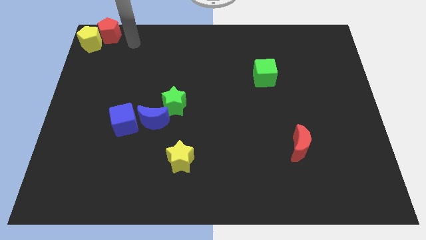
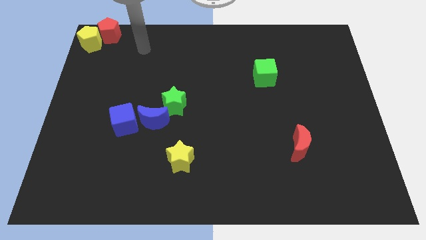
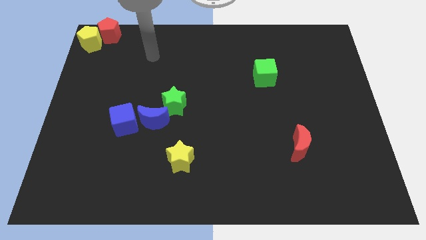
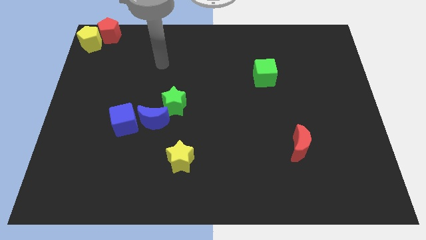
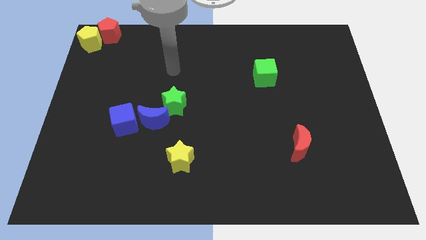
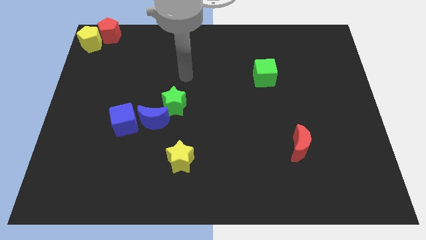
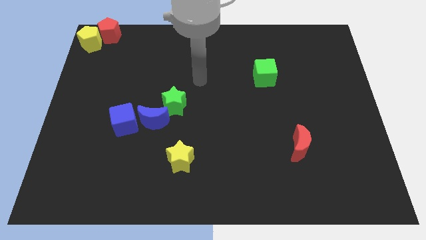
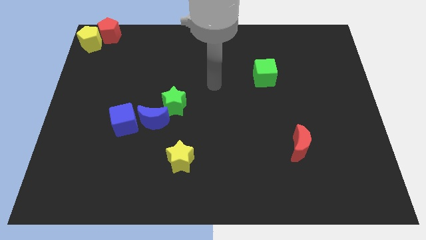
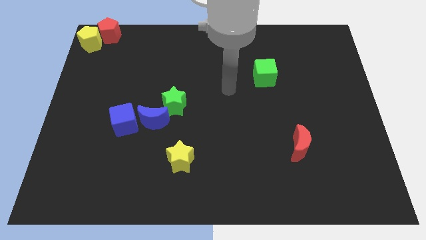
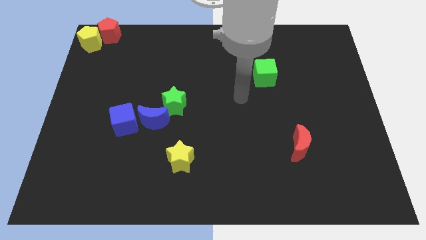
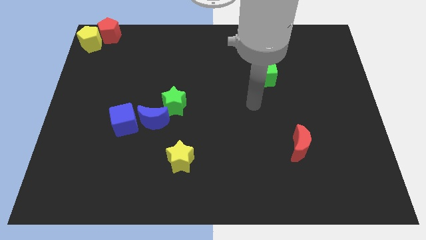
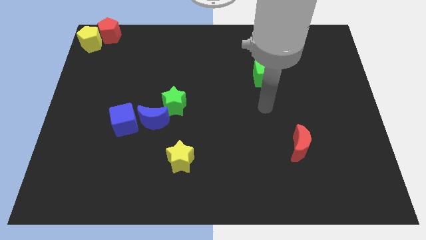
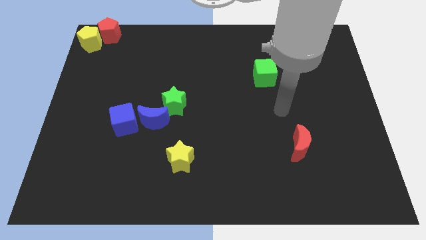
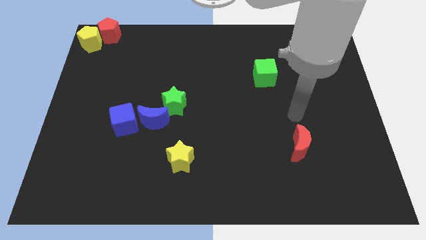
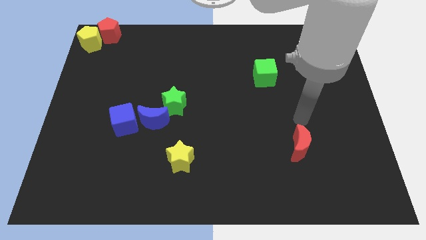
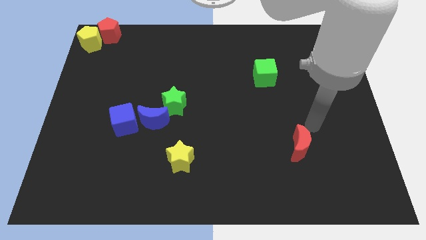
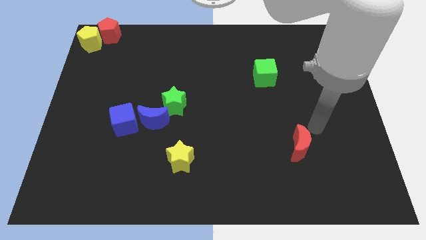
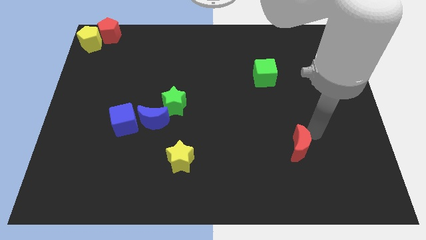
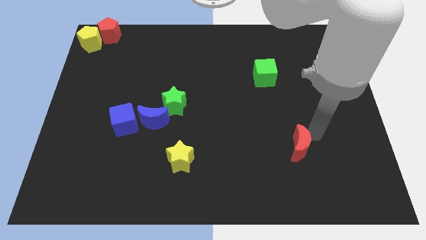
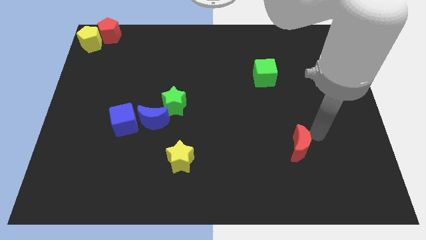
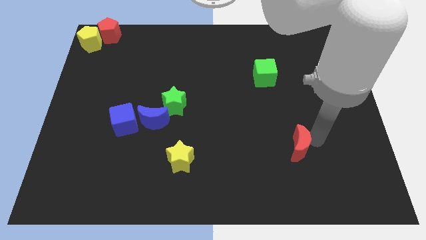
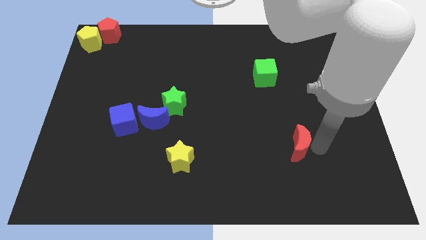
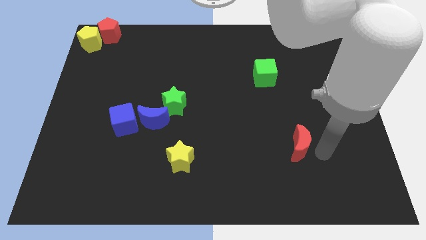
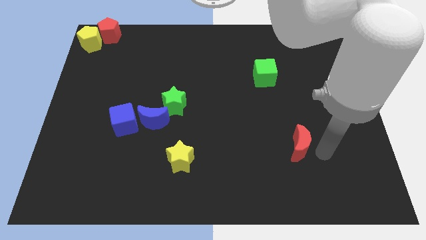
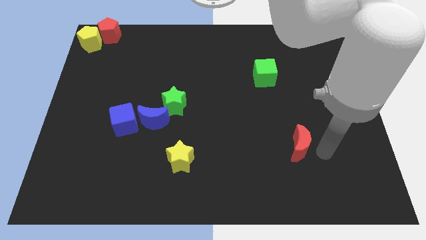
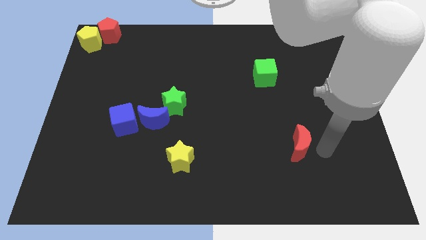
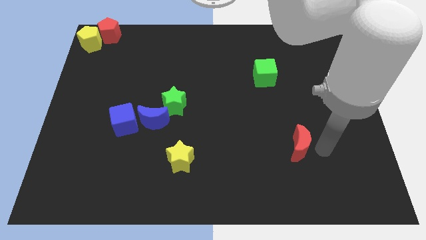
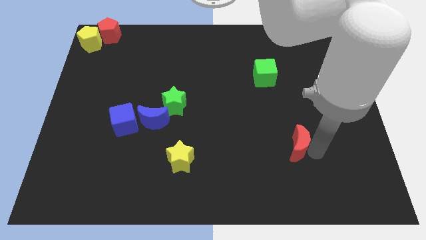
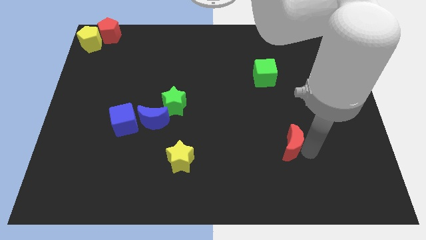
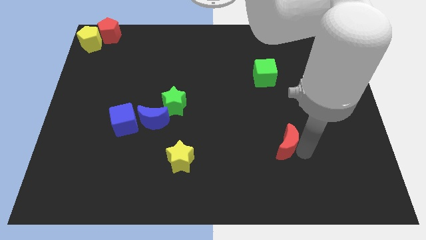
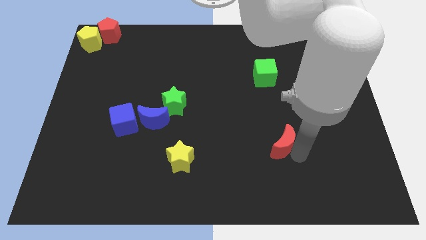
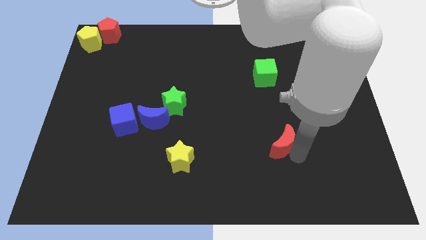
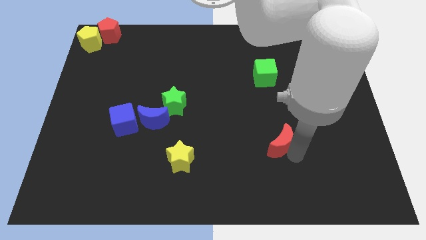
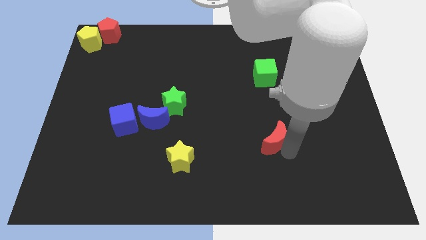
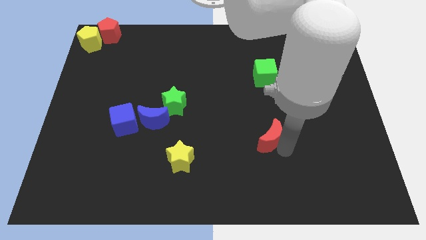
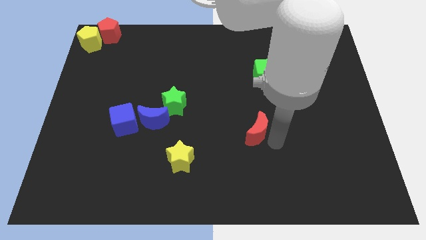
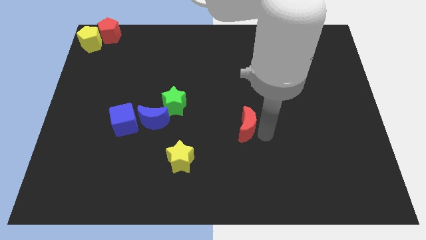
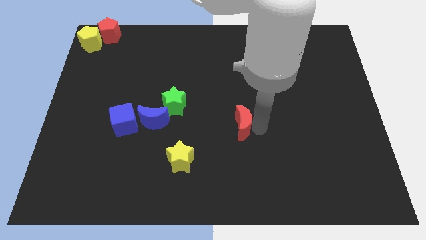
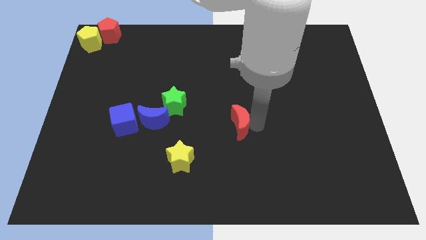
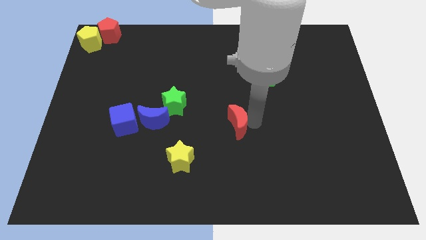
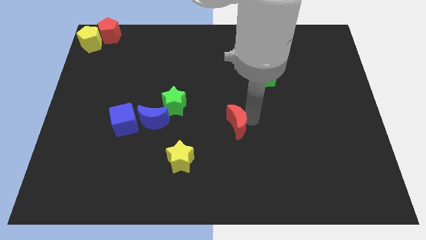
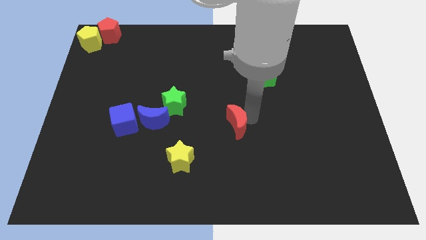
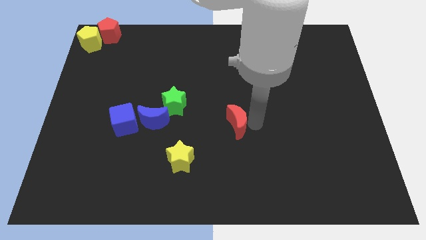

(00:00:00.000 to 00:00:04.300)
move red moon to the center of the board

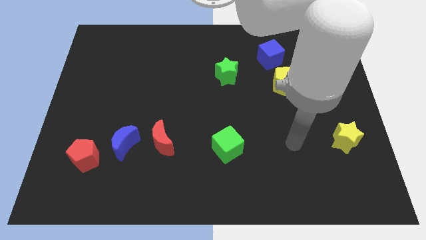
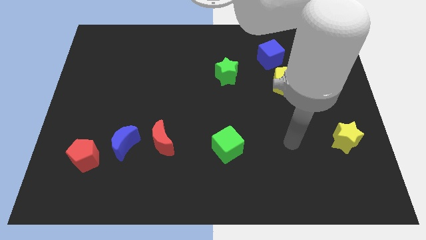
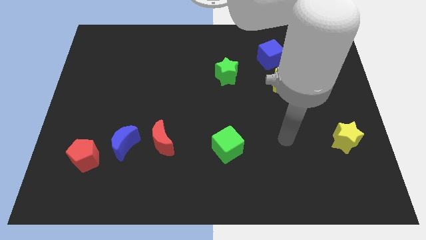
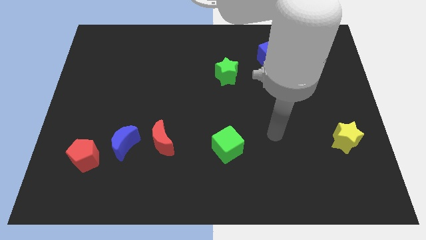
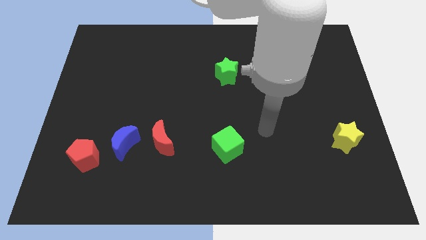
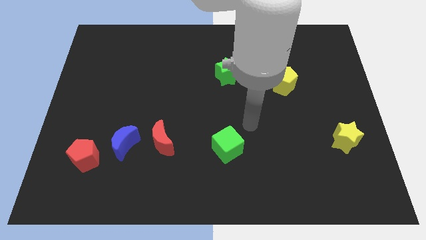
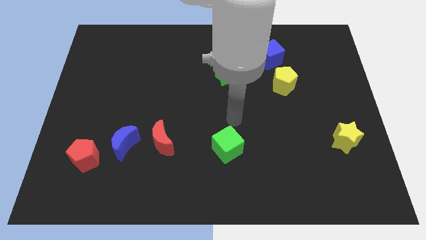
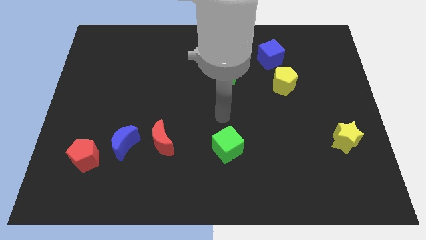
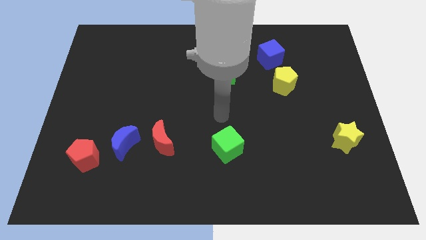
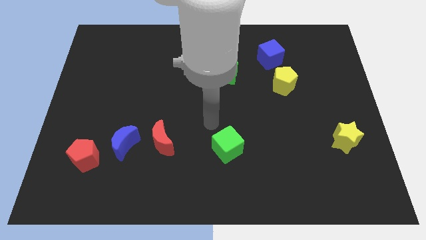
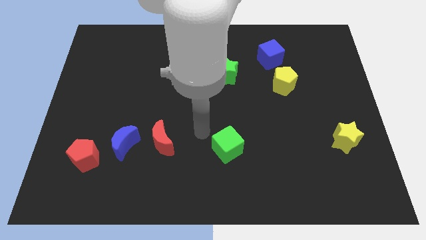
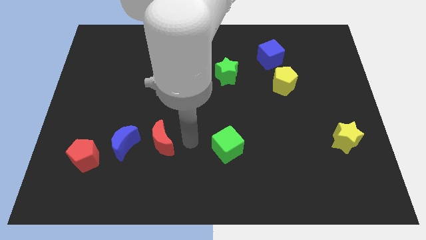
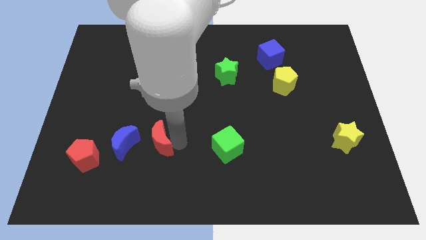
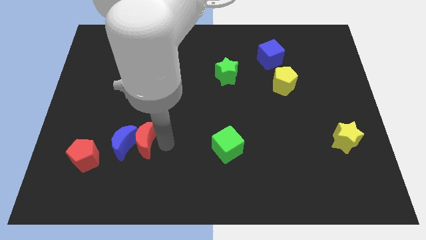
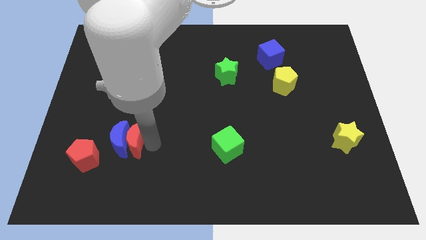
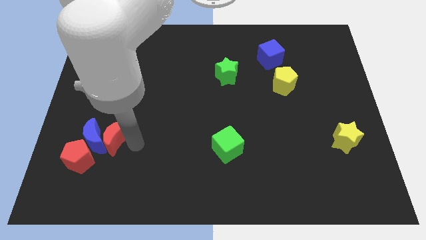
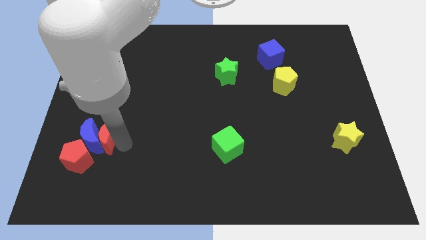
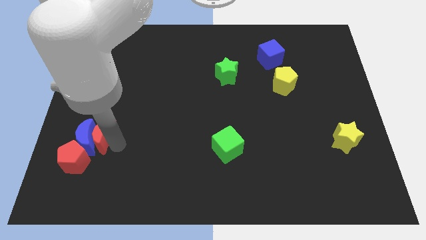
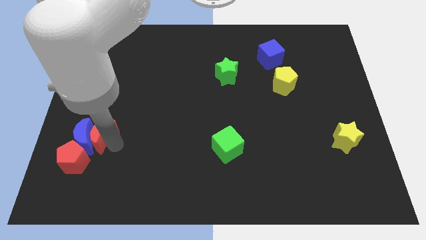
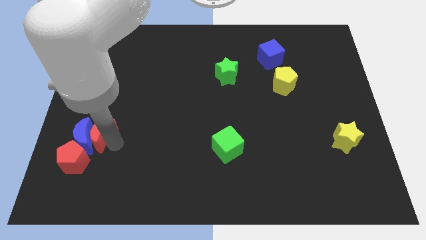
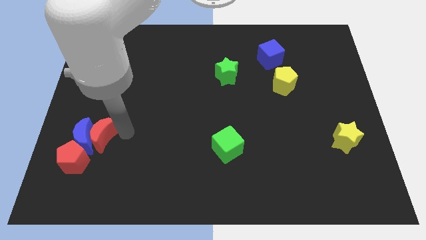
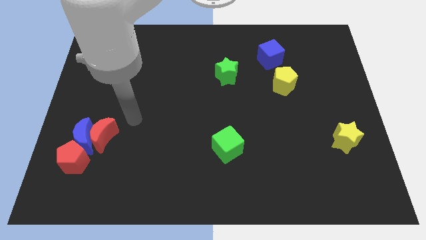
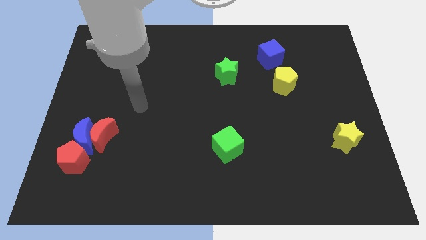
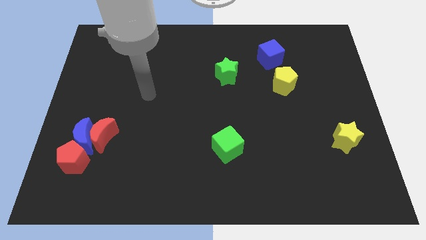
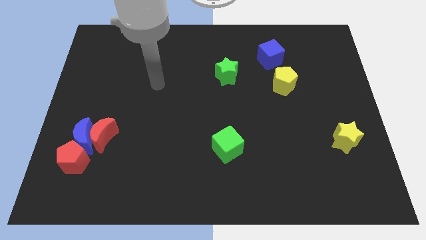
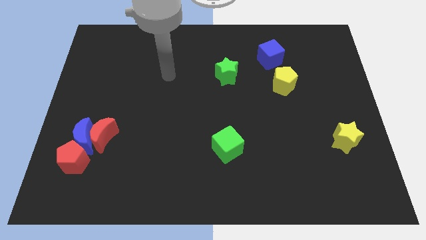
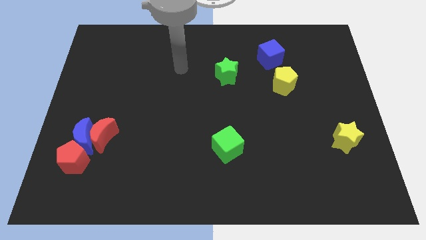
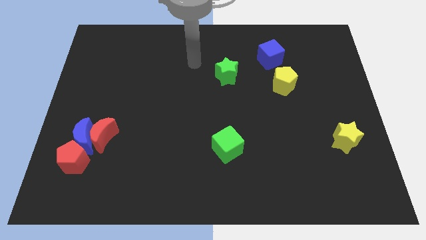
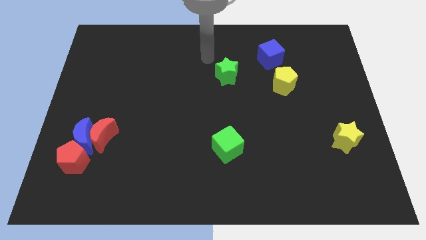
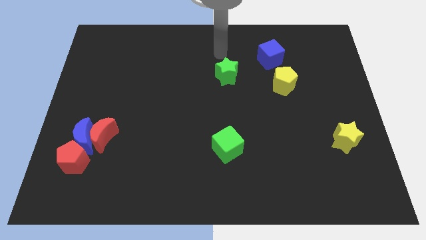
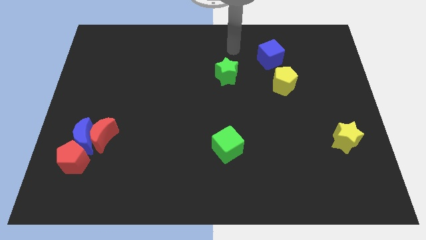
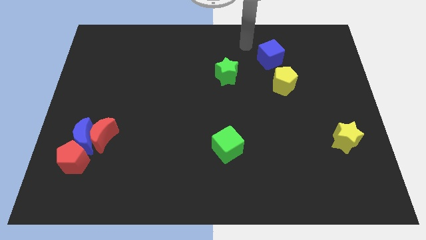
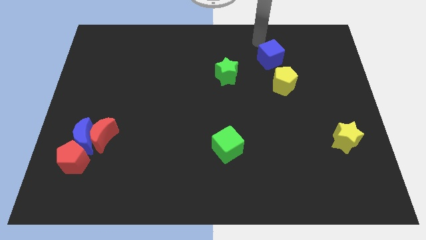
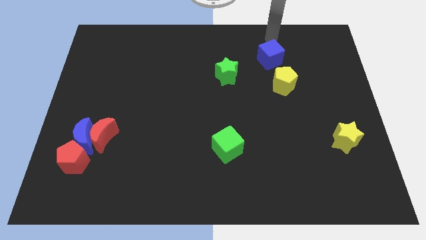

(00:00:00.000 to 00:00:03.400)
push the red moon into the blue moon

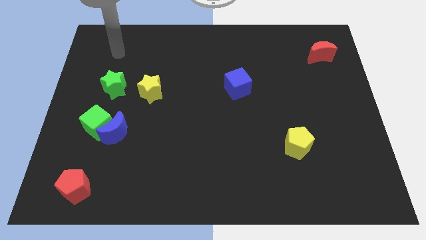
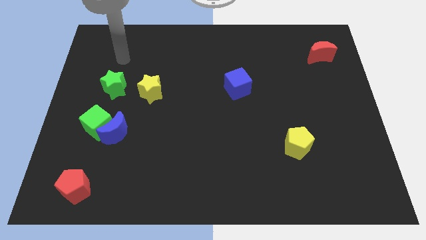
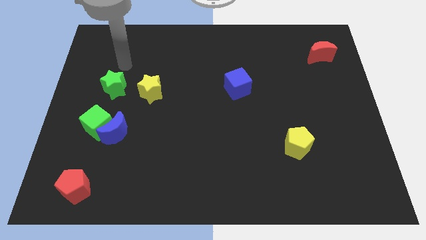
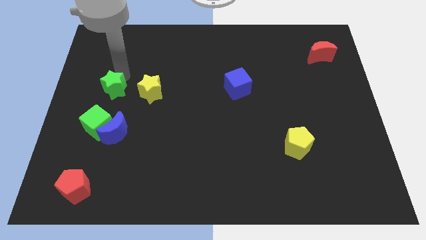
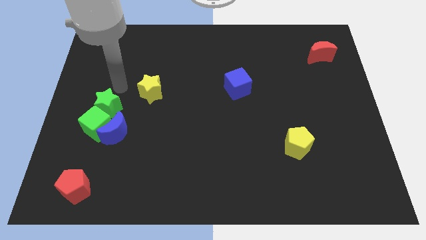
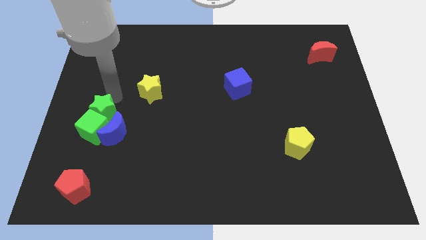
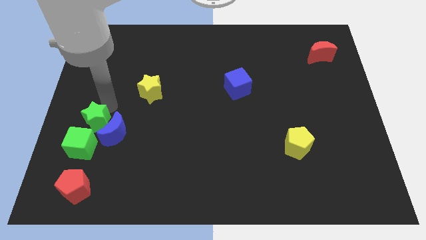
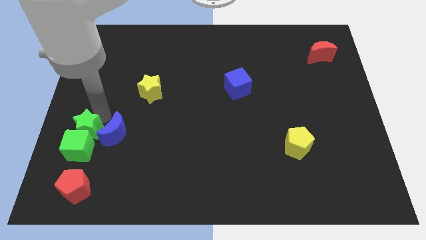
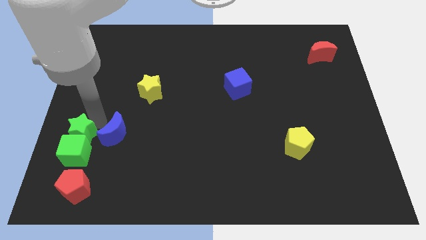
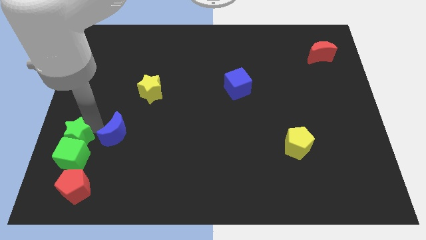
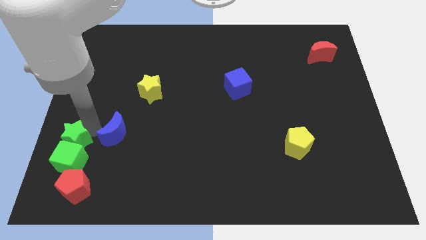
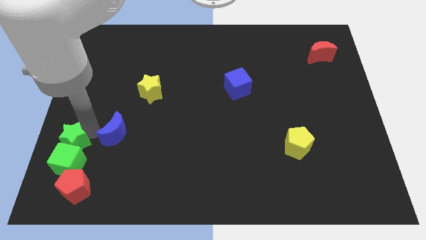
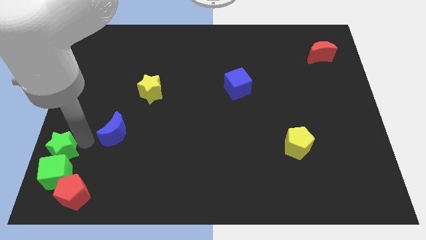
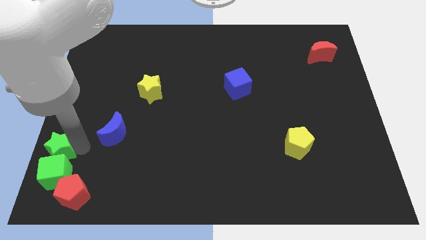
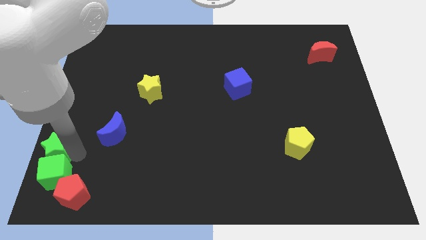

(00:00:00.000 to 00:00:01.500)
slide the green star into the green cube
